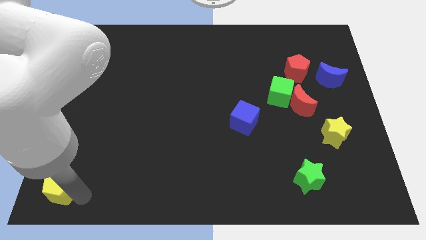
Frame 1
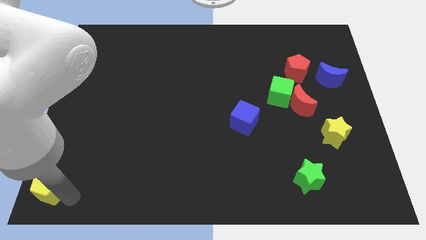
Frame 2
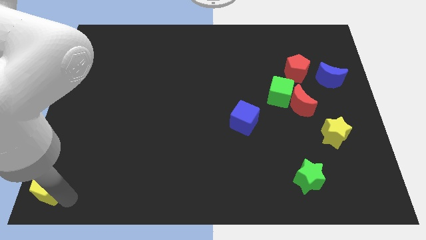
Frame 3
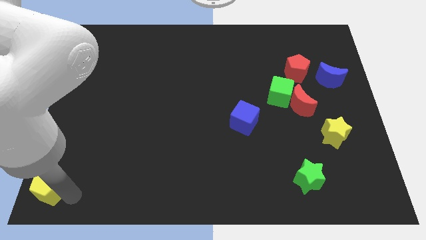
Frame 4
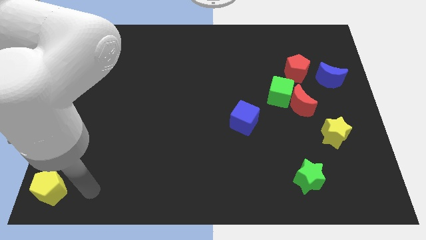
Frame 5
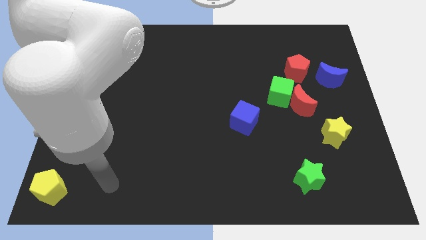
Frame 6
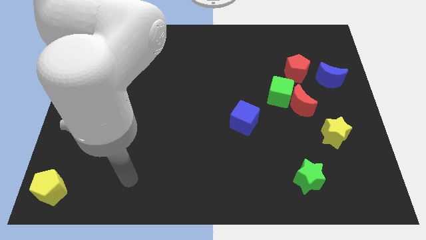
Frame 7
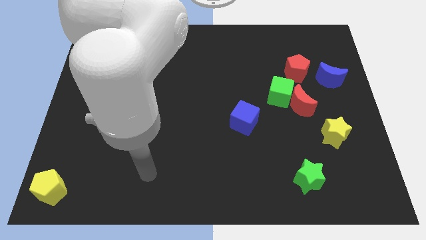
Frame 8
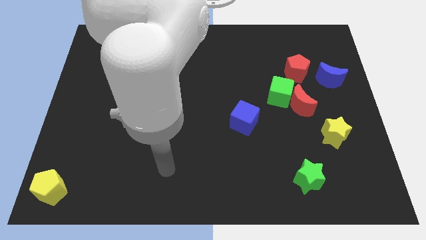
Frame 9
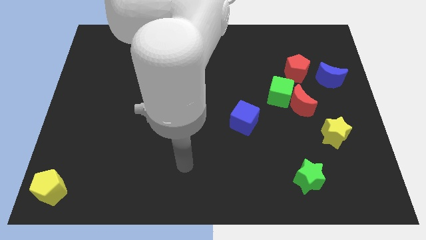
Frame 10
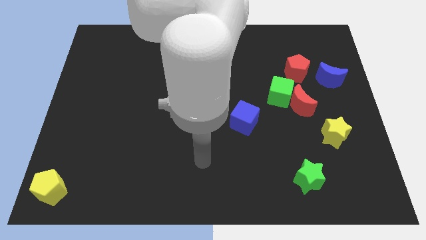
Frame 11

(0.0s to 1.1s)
slide your arm away from yellow pentagon

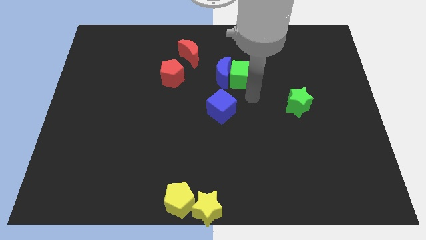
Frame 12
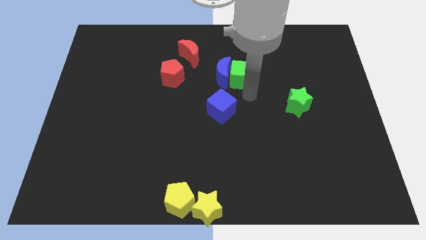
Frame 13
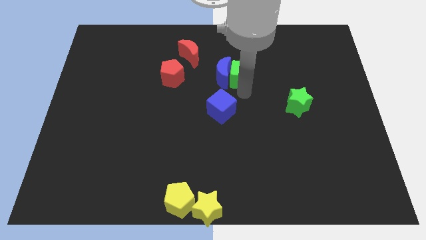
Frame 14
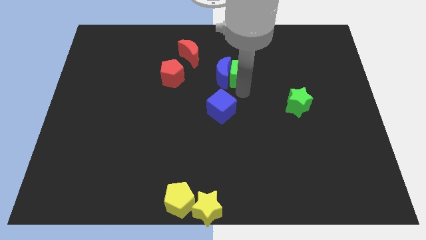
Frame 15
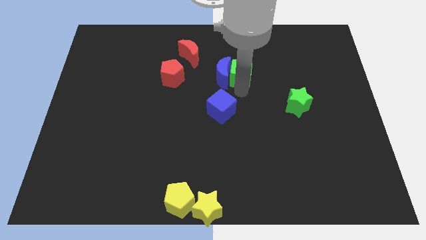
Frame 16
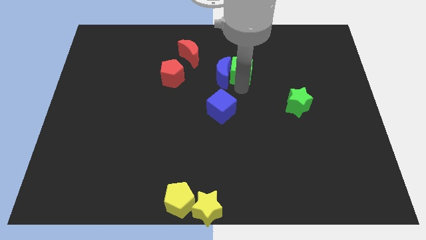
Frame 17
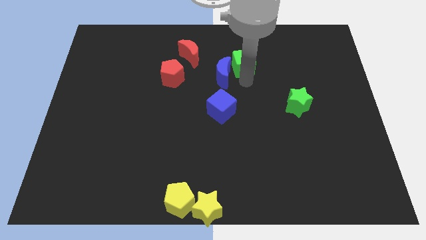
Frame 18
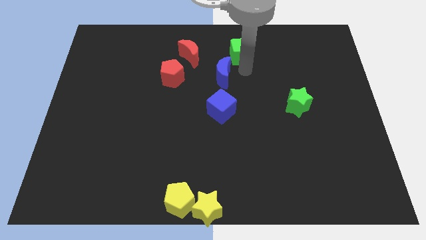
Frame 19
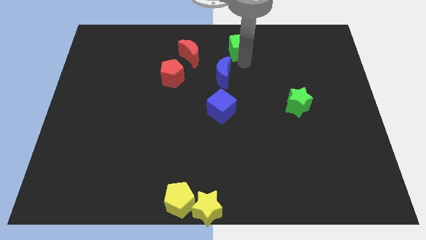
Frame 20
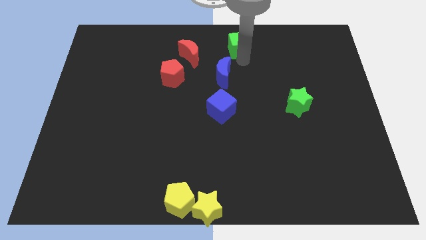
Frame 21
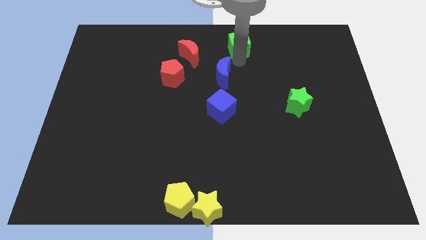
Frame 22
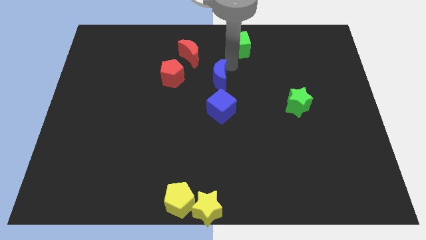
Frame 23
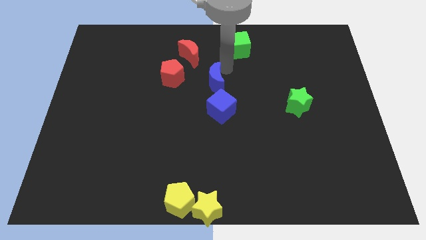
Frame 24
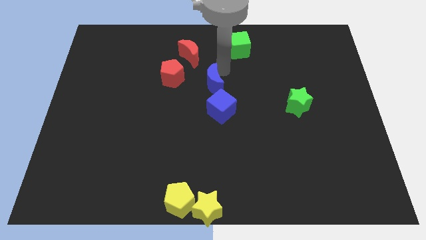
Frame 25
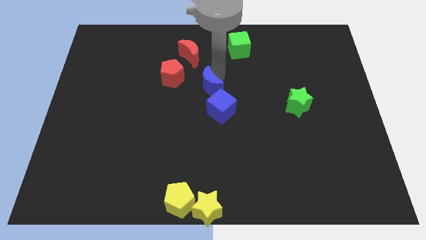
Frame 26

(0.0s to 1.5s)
drag the green cube upwards

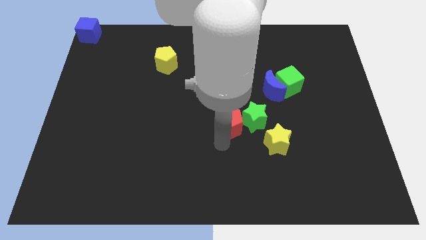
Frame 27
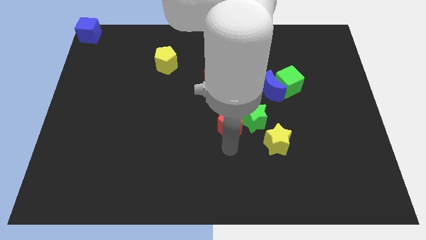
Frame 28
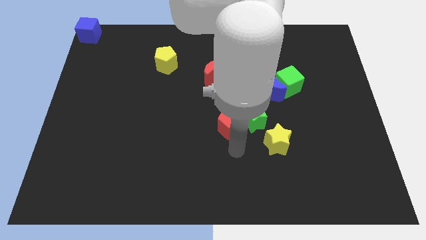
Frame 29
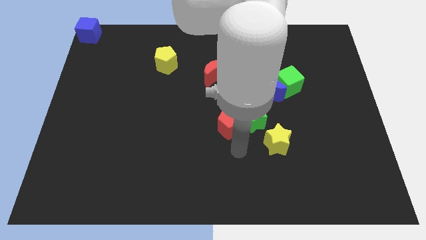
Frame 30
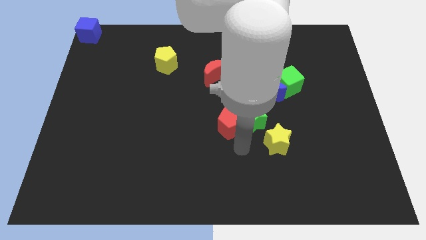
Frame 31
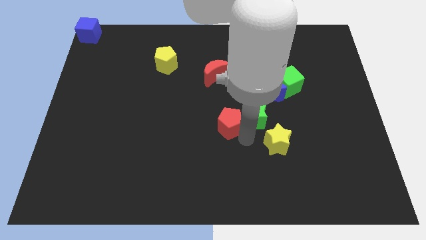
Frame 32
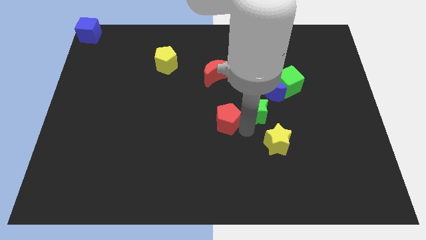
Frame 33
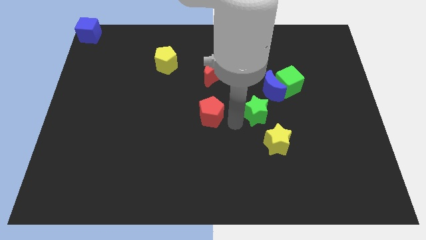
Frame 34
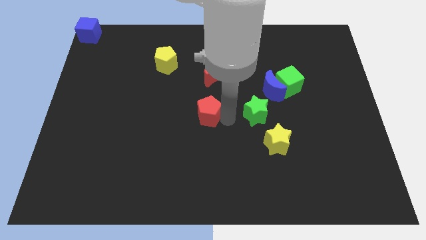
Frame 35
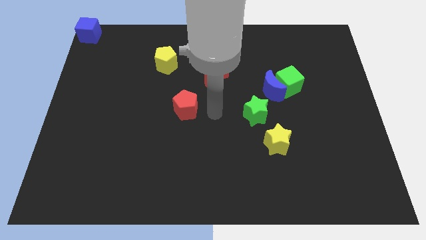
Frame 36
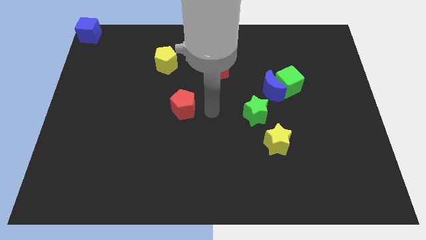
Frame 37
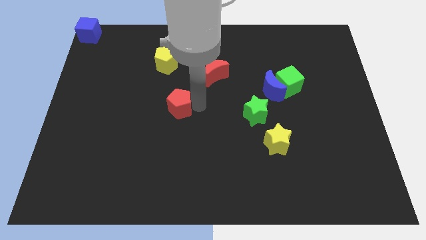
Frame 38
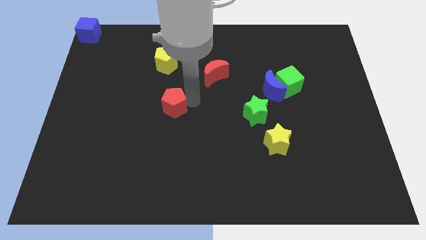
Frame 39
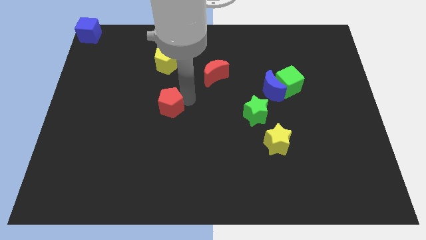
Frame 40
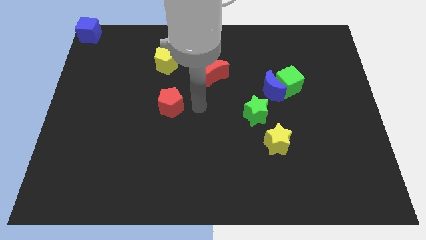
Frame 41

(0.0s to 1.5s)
place the red pentagon to the bottom of the yellow pentagon

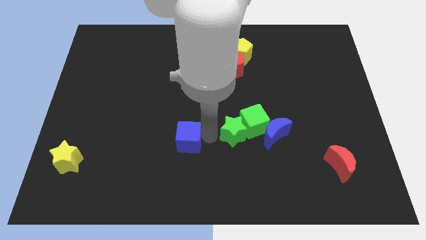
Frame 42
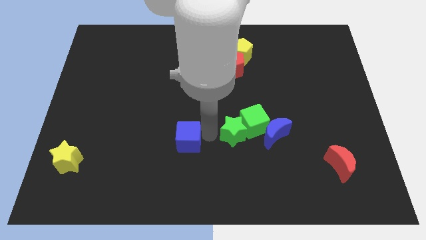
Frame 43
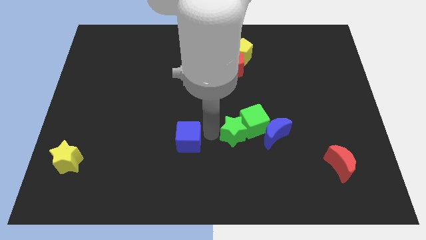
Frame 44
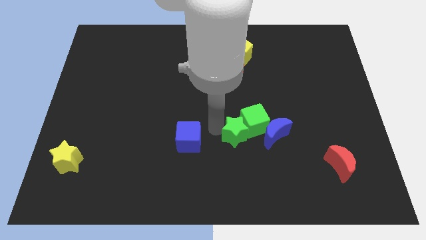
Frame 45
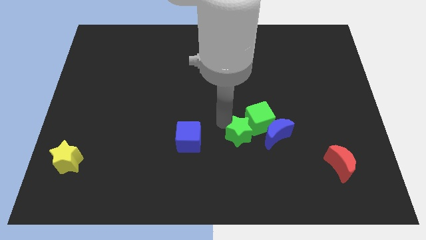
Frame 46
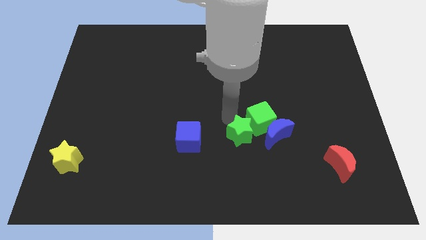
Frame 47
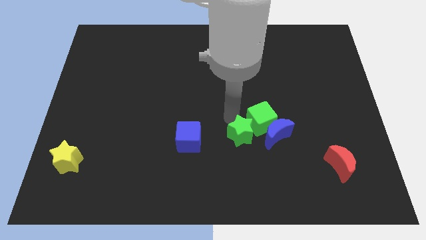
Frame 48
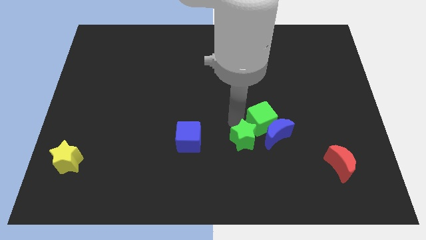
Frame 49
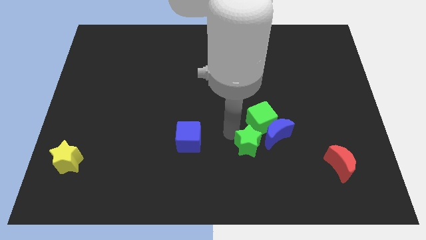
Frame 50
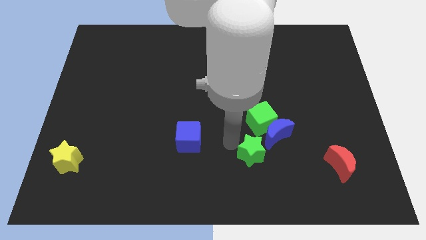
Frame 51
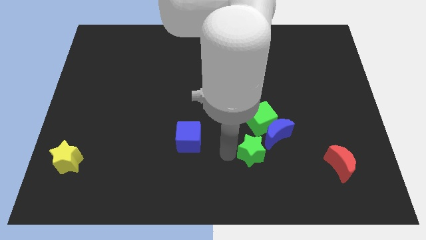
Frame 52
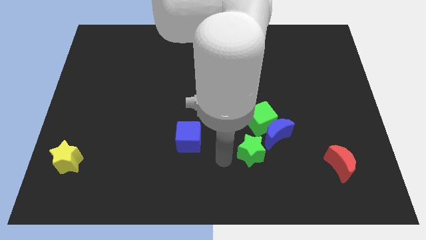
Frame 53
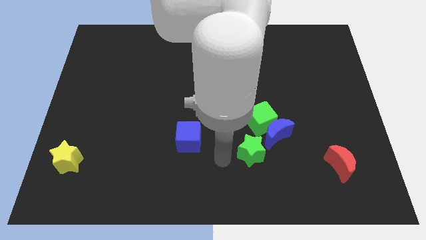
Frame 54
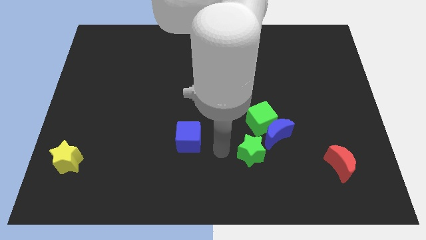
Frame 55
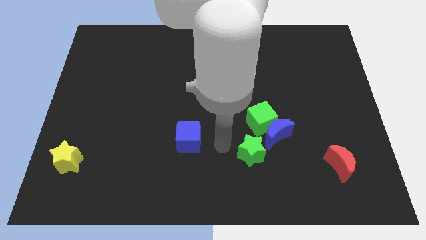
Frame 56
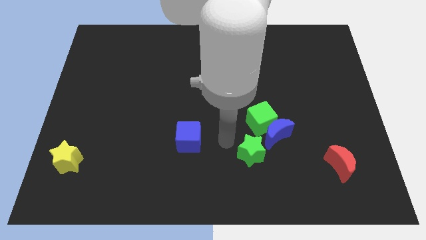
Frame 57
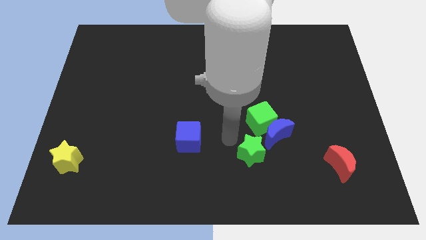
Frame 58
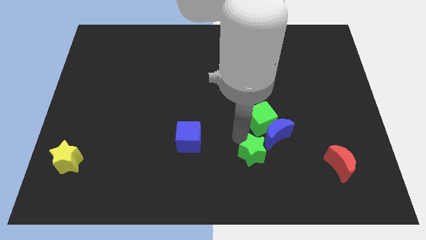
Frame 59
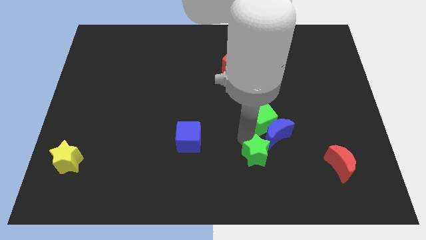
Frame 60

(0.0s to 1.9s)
slide the green star diagonally to the blue moon

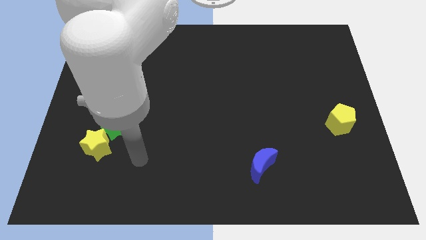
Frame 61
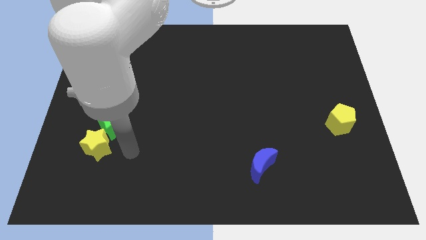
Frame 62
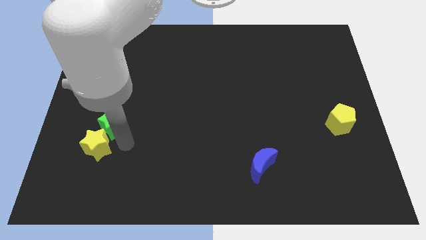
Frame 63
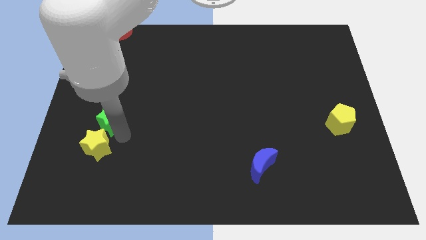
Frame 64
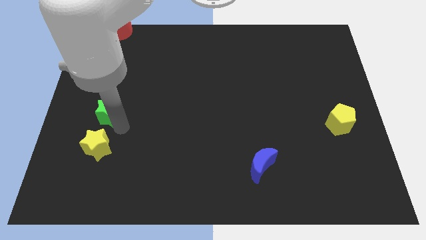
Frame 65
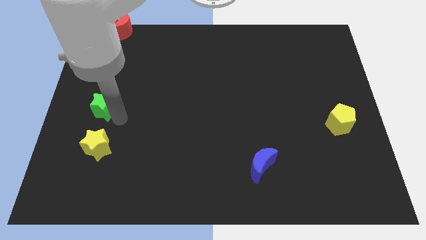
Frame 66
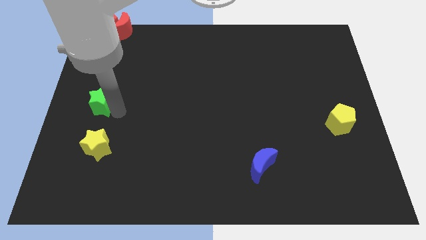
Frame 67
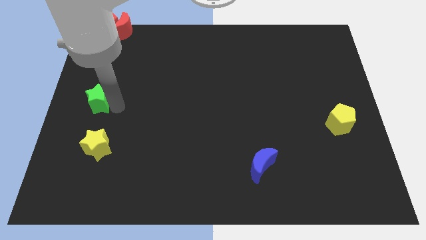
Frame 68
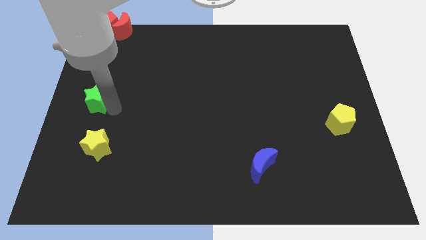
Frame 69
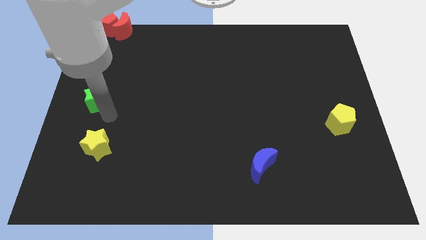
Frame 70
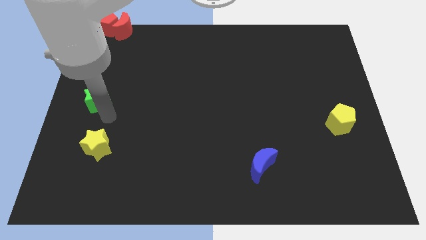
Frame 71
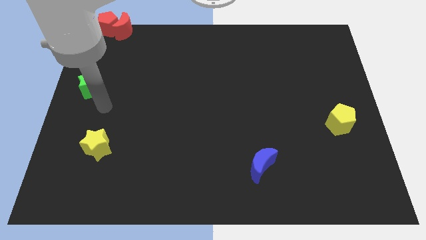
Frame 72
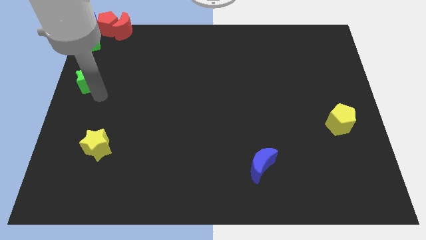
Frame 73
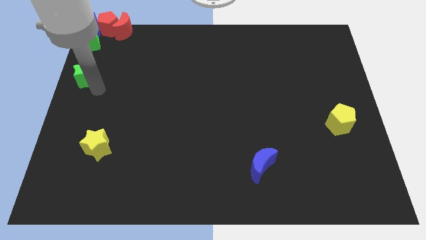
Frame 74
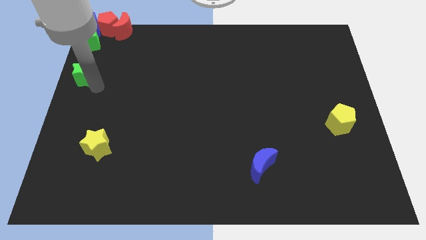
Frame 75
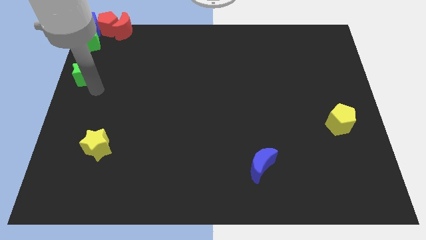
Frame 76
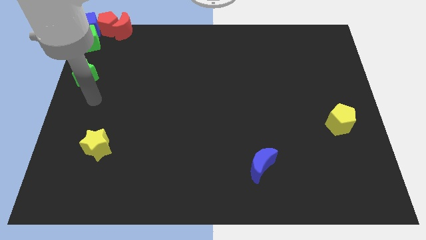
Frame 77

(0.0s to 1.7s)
place the green star below the green cube

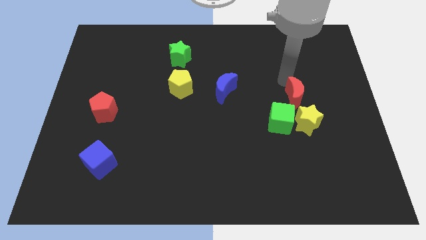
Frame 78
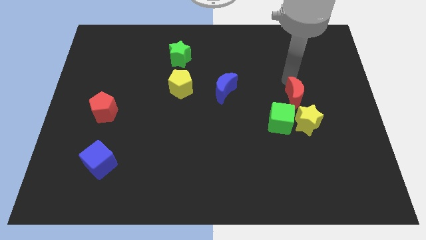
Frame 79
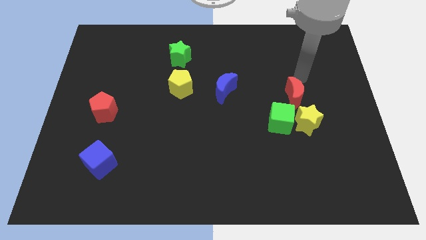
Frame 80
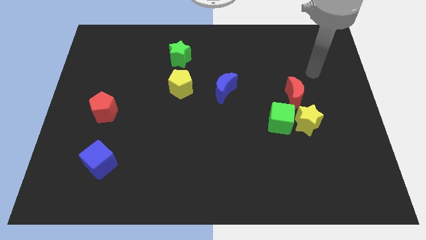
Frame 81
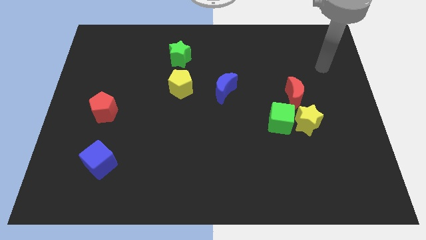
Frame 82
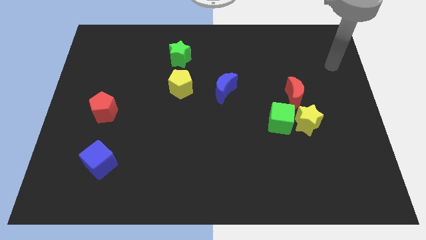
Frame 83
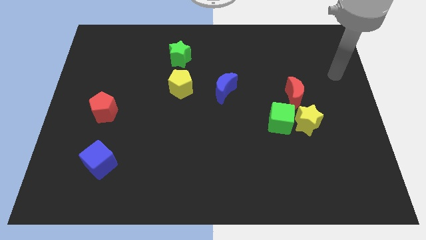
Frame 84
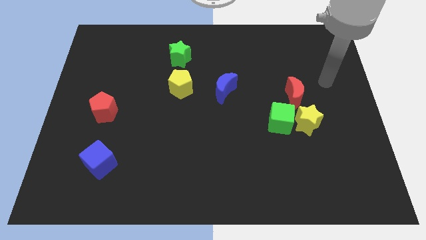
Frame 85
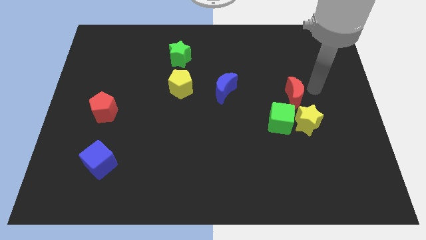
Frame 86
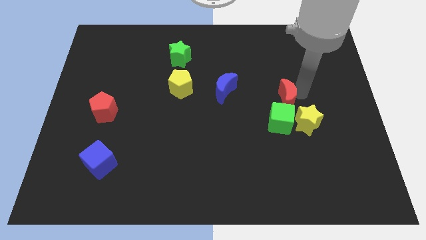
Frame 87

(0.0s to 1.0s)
move the arm towards the red crescent

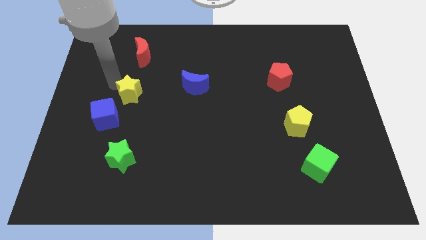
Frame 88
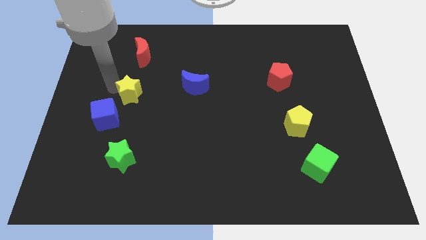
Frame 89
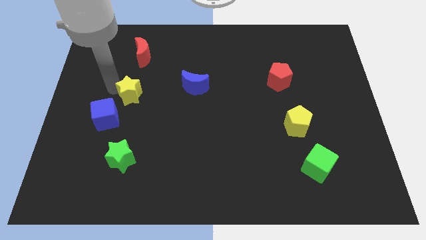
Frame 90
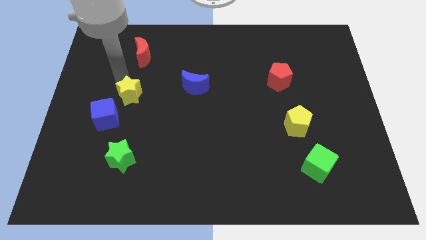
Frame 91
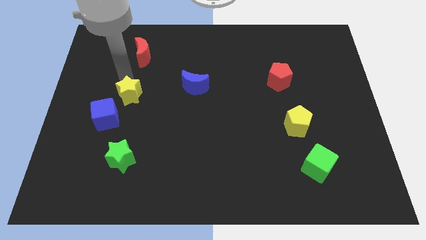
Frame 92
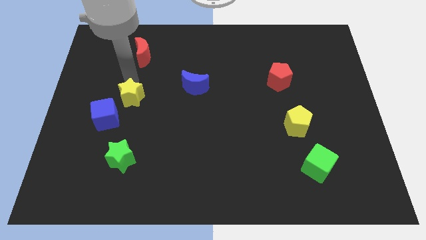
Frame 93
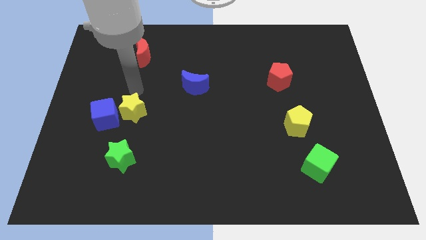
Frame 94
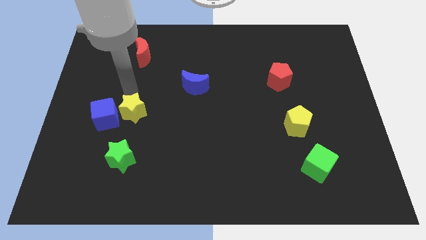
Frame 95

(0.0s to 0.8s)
place the yellow star to the right side of the blue cube
